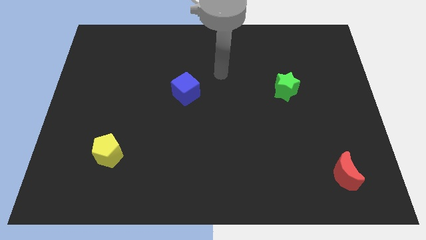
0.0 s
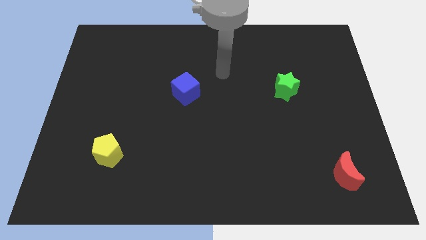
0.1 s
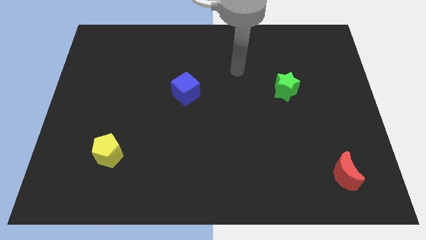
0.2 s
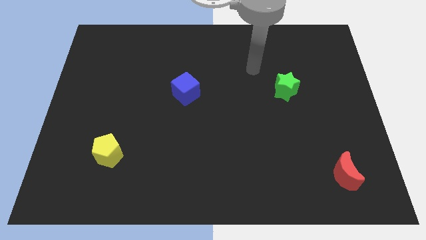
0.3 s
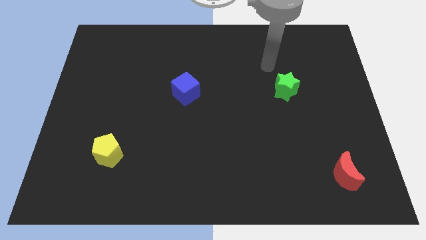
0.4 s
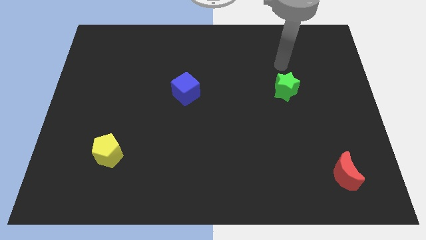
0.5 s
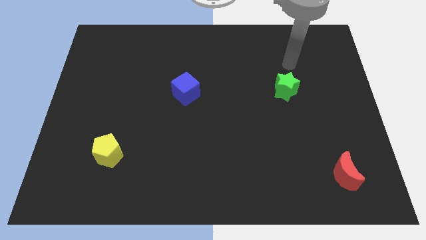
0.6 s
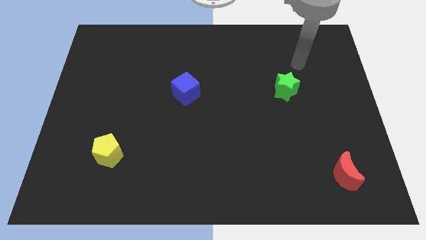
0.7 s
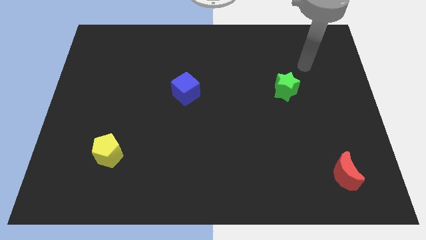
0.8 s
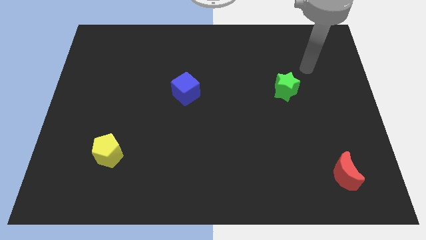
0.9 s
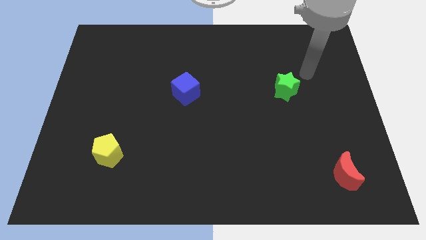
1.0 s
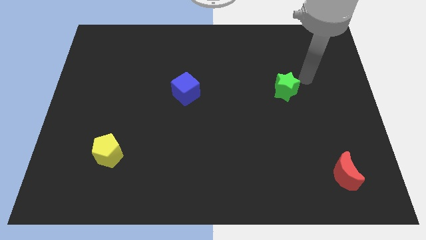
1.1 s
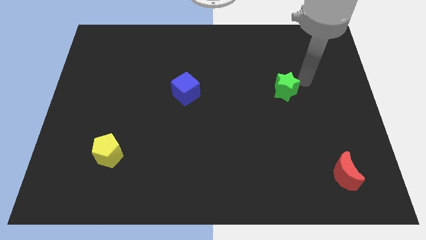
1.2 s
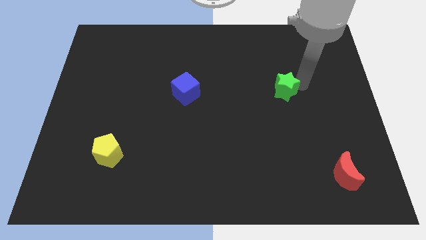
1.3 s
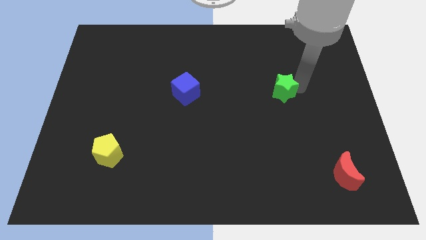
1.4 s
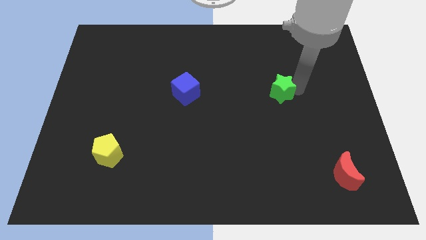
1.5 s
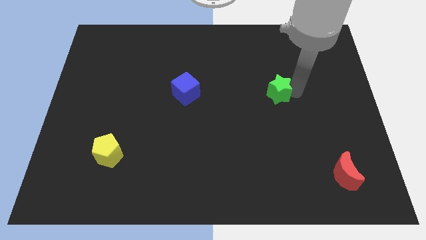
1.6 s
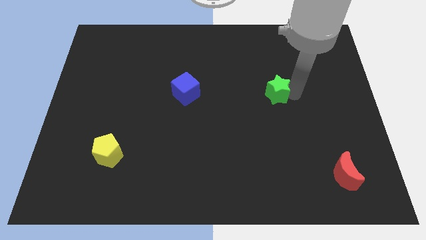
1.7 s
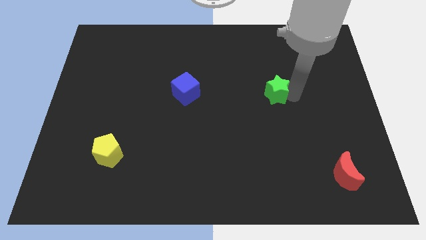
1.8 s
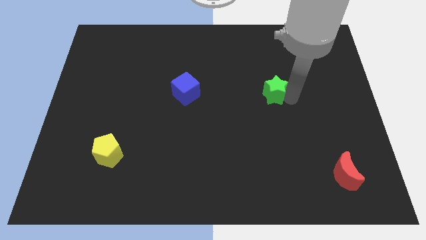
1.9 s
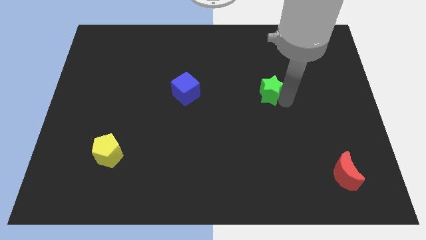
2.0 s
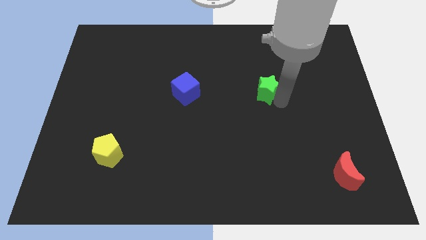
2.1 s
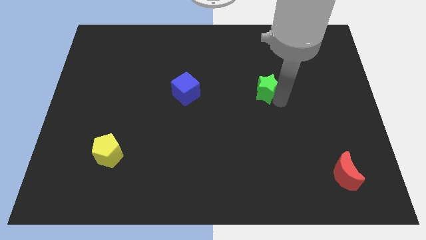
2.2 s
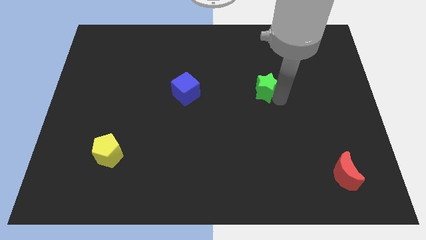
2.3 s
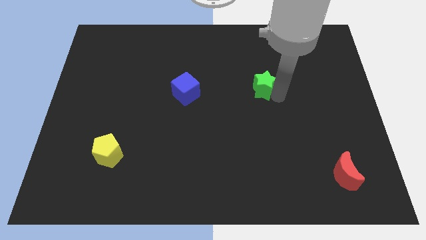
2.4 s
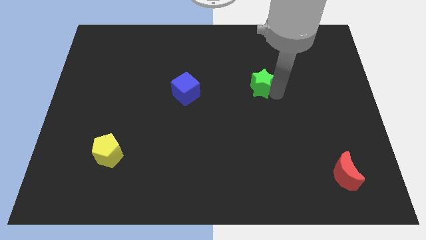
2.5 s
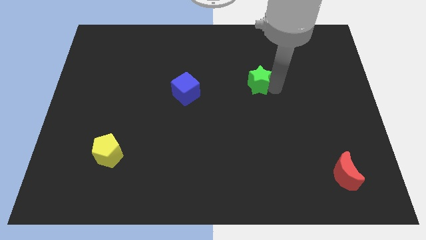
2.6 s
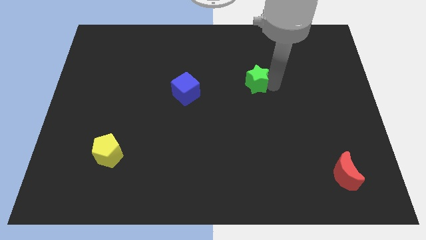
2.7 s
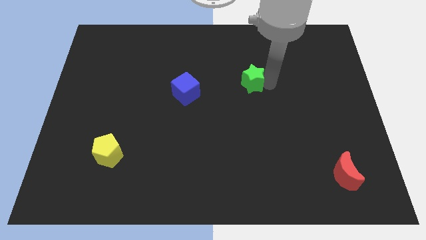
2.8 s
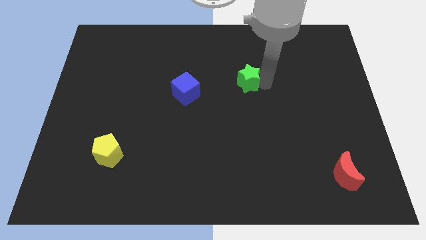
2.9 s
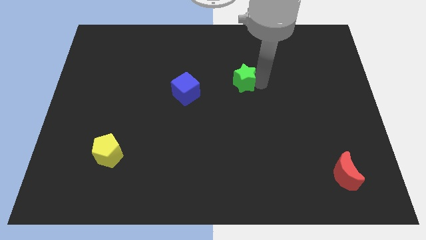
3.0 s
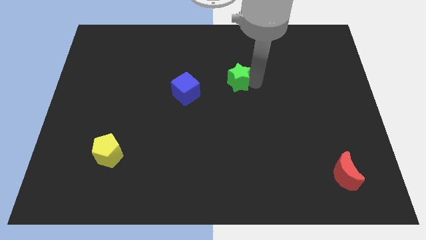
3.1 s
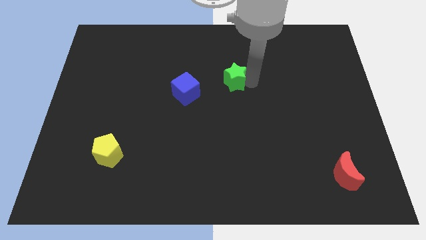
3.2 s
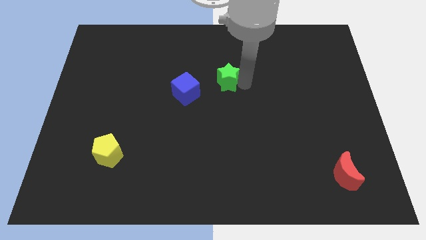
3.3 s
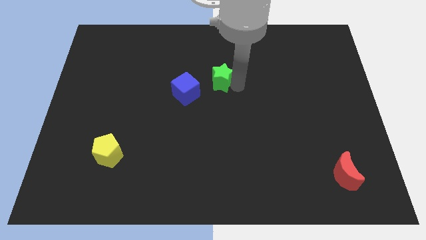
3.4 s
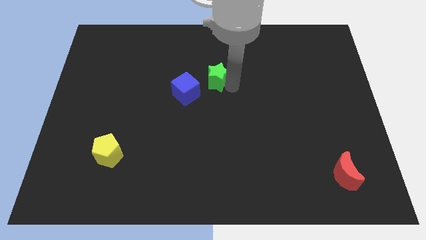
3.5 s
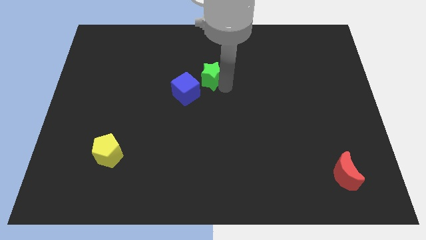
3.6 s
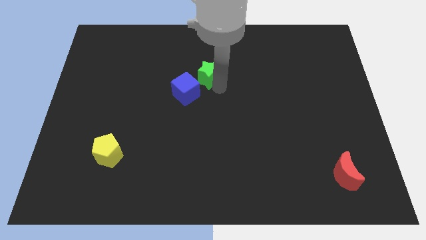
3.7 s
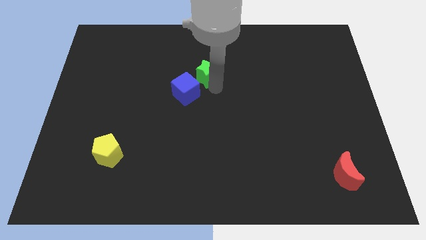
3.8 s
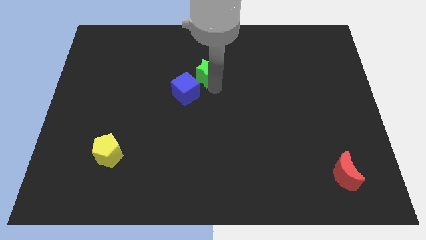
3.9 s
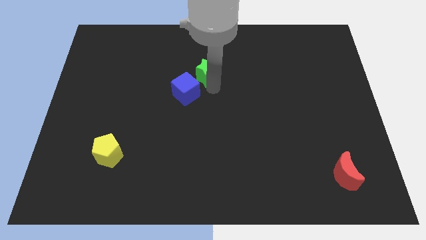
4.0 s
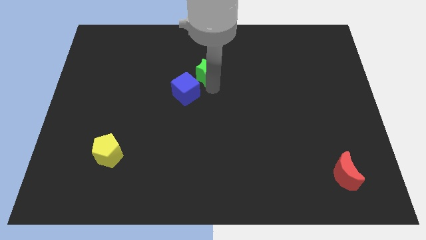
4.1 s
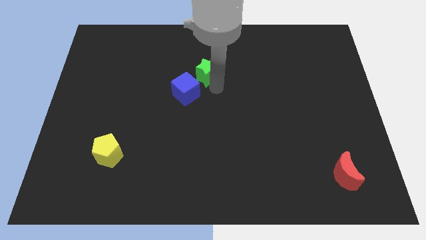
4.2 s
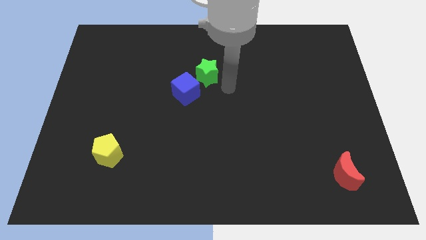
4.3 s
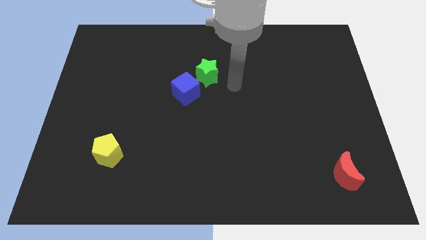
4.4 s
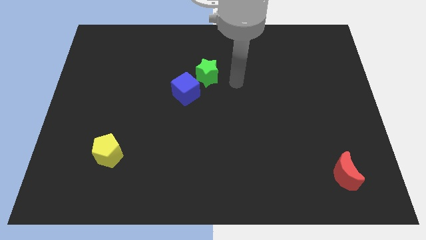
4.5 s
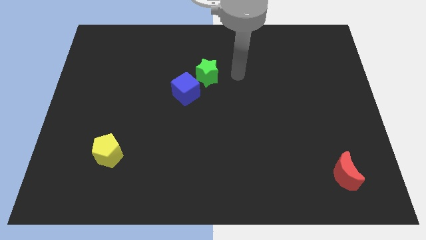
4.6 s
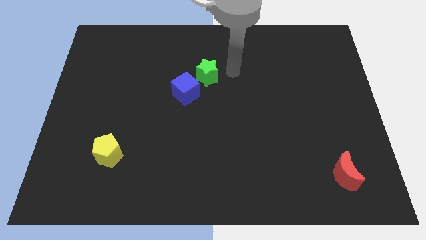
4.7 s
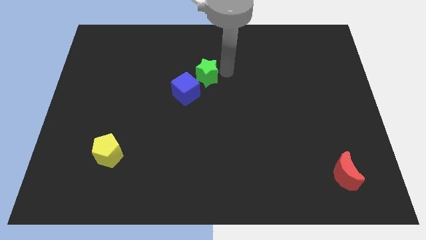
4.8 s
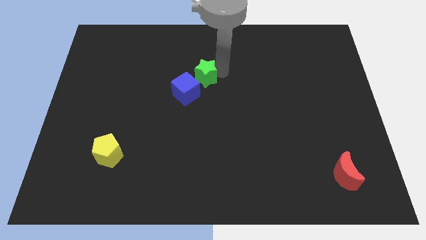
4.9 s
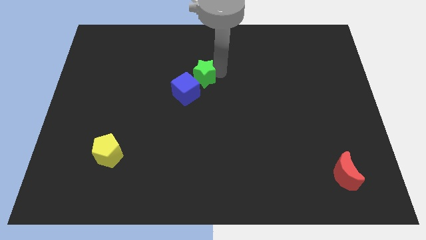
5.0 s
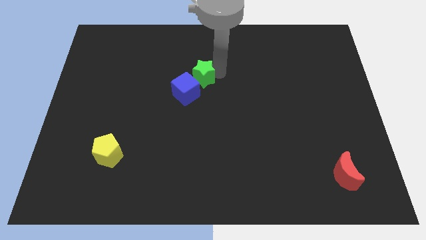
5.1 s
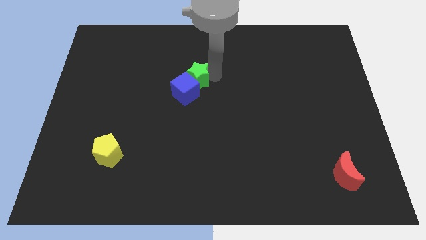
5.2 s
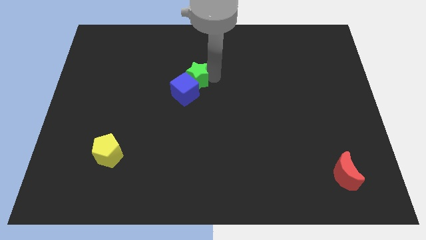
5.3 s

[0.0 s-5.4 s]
slide the star close to the blue cube

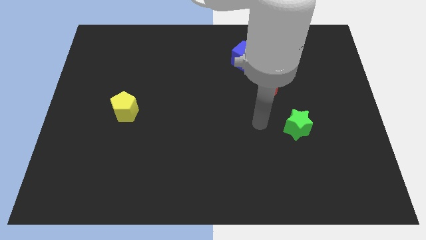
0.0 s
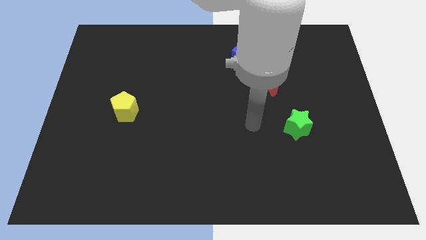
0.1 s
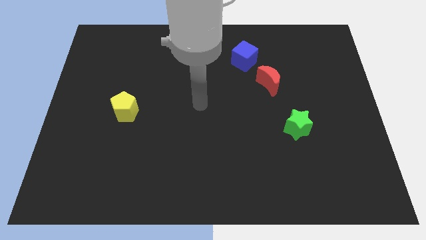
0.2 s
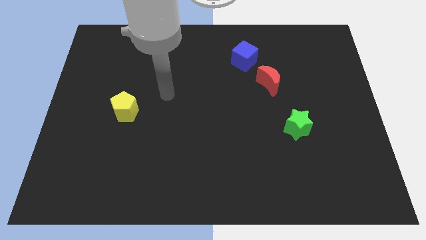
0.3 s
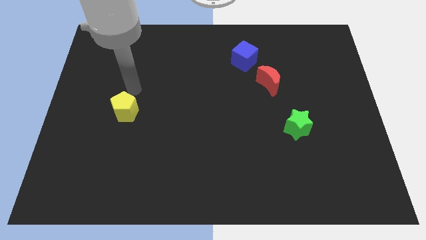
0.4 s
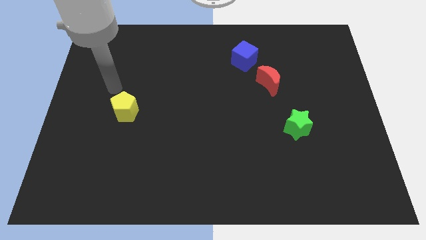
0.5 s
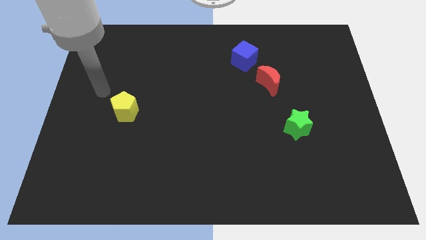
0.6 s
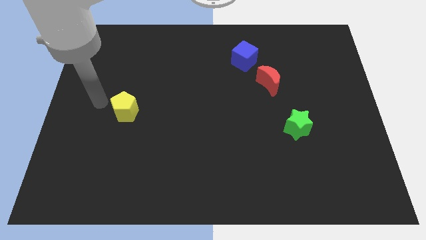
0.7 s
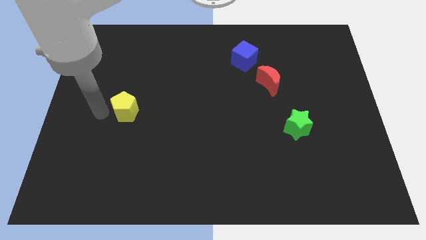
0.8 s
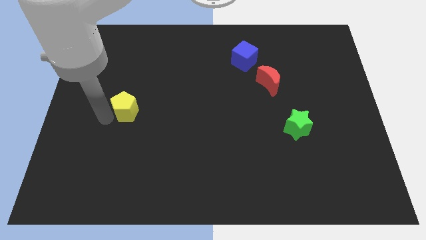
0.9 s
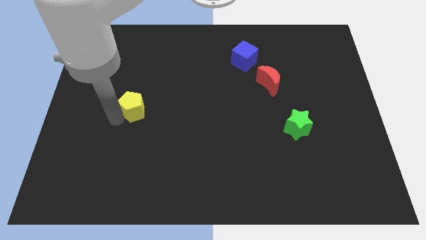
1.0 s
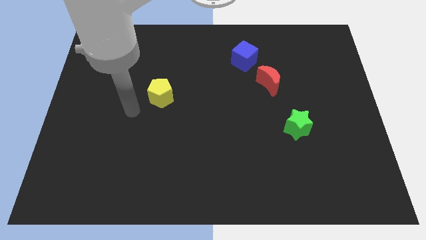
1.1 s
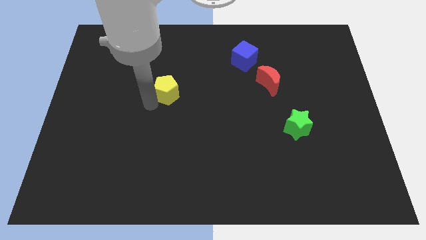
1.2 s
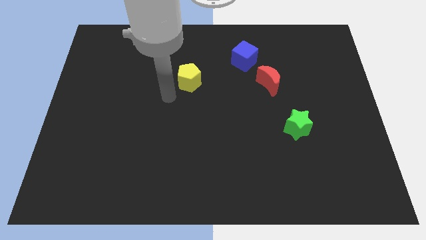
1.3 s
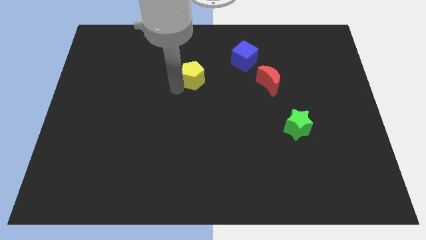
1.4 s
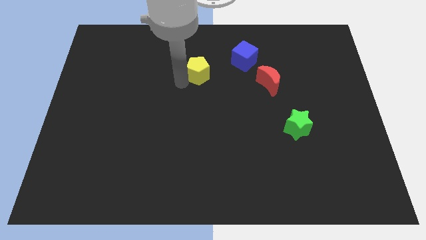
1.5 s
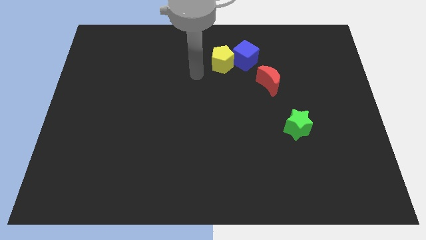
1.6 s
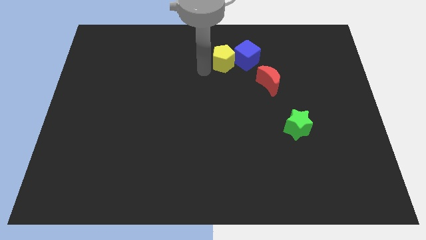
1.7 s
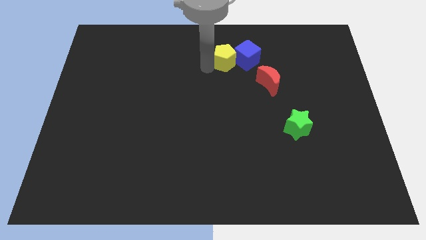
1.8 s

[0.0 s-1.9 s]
put the pentagon close to the blue block

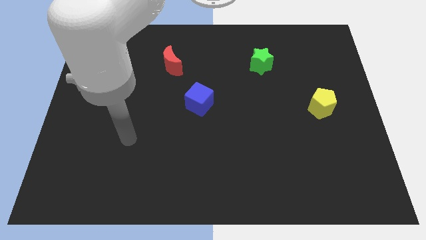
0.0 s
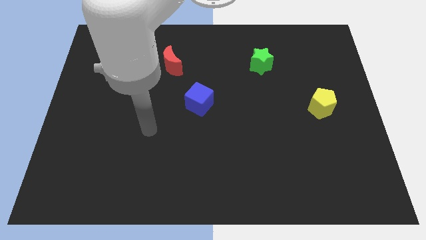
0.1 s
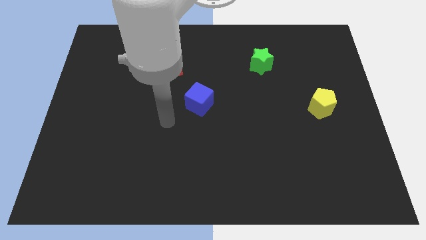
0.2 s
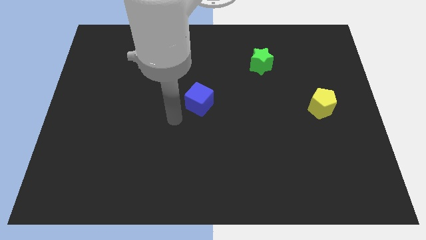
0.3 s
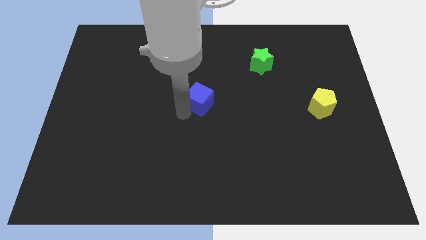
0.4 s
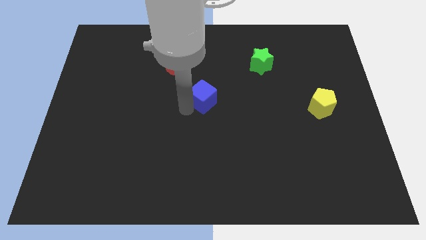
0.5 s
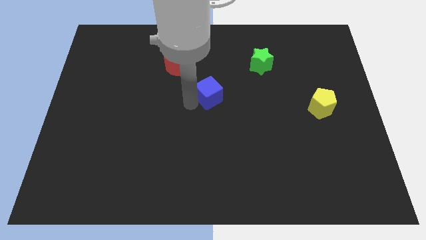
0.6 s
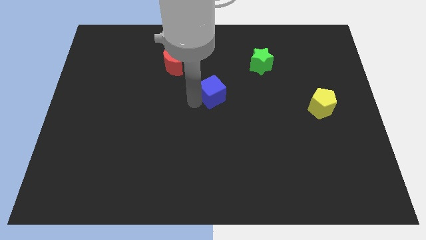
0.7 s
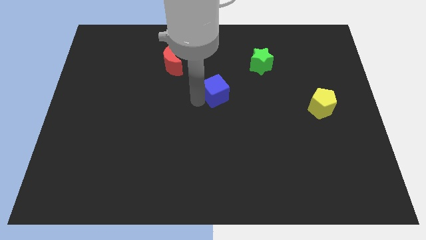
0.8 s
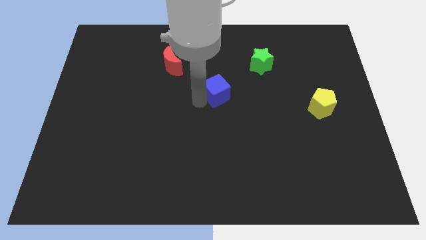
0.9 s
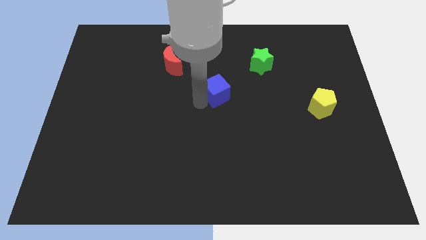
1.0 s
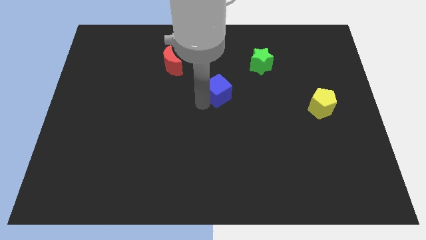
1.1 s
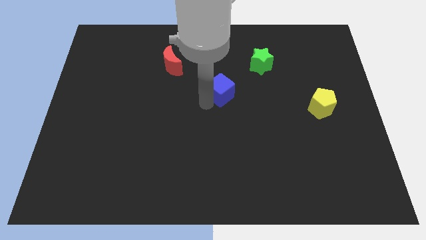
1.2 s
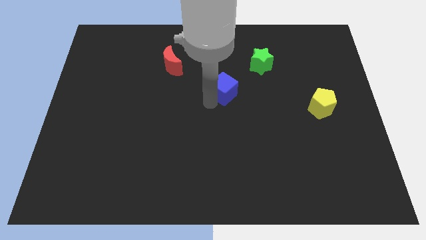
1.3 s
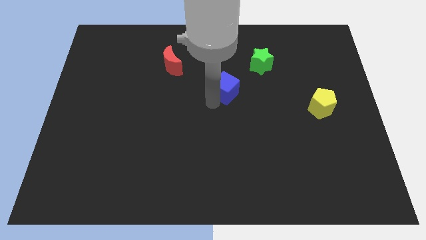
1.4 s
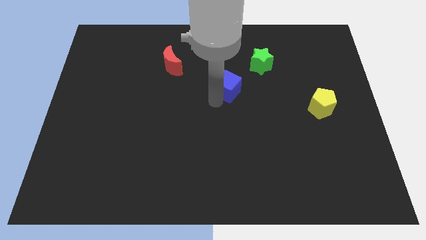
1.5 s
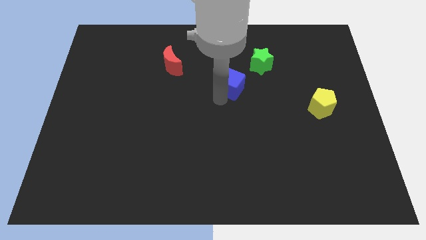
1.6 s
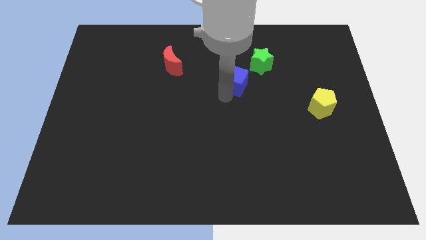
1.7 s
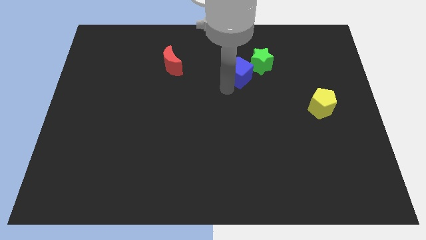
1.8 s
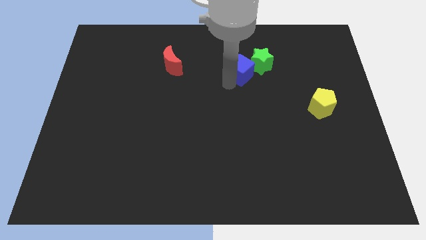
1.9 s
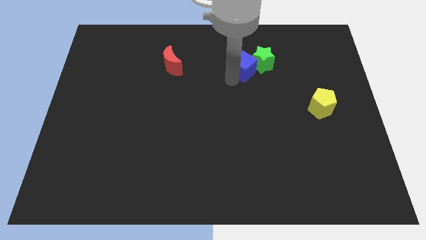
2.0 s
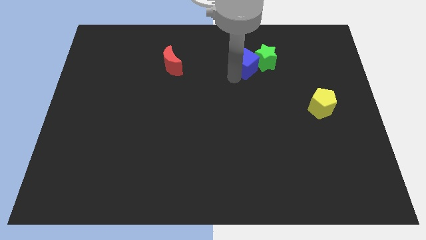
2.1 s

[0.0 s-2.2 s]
put the cube next to the green block
